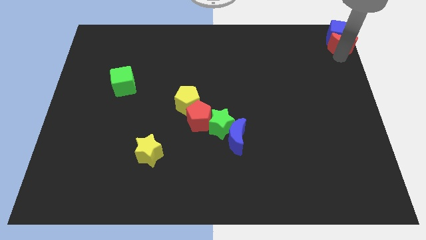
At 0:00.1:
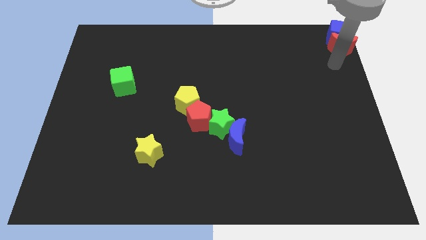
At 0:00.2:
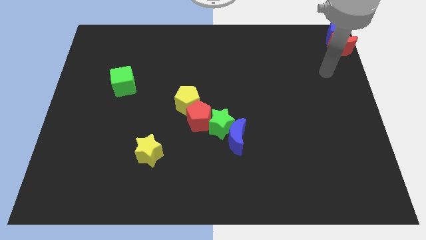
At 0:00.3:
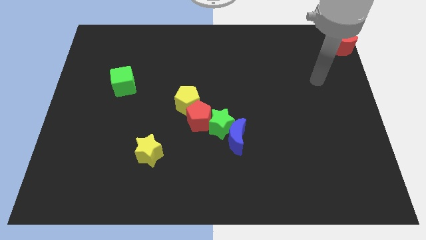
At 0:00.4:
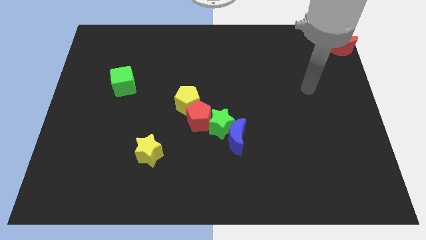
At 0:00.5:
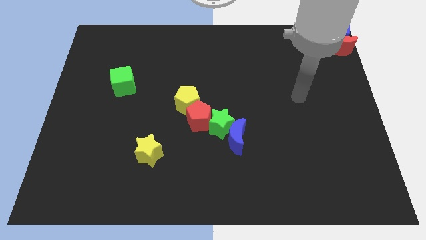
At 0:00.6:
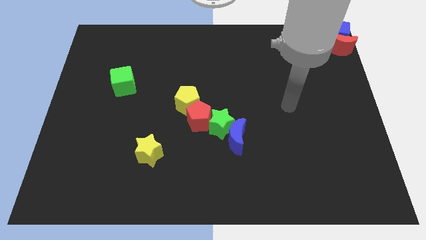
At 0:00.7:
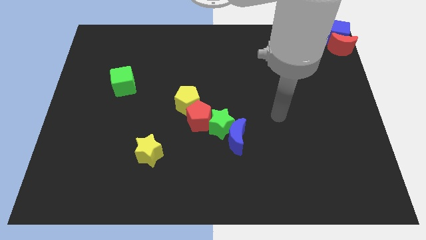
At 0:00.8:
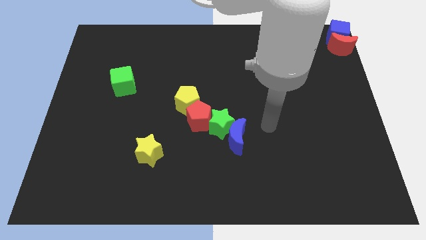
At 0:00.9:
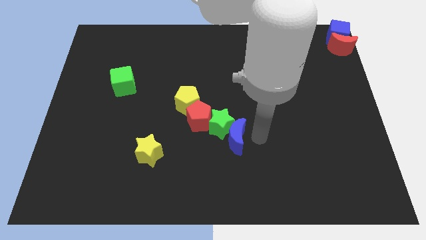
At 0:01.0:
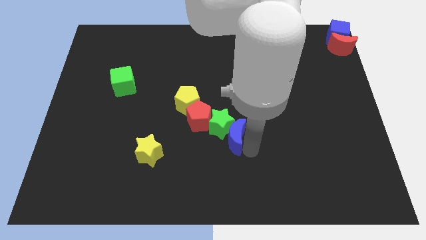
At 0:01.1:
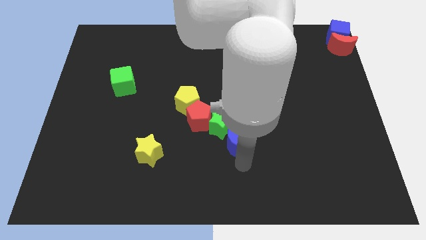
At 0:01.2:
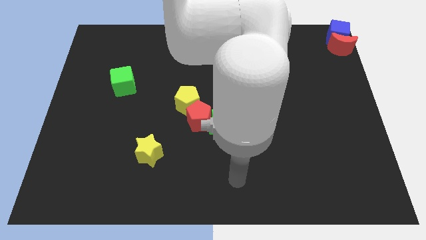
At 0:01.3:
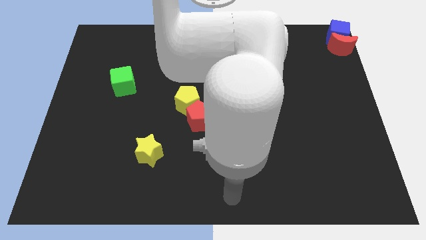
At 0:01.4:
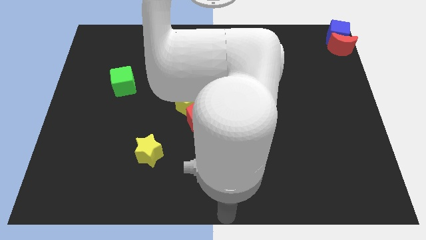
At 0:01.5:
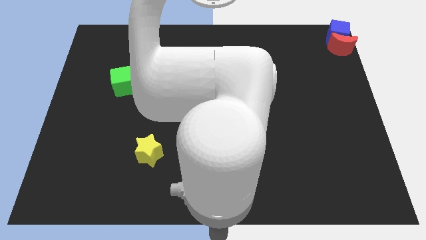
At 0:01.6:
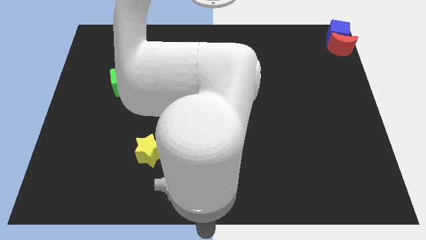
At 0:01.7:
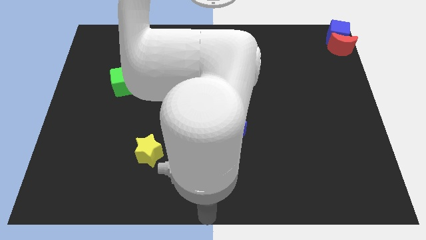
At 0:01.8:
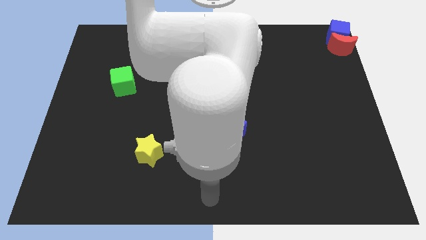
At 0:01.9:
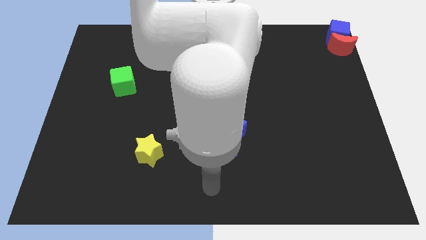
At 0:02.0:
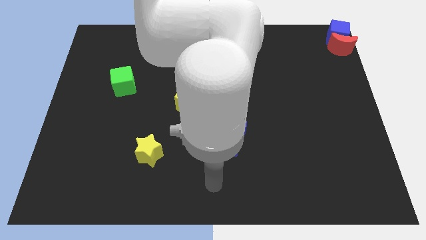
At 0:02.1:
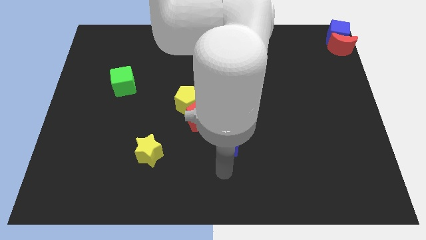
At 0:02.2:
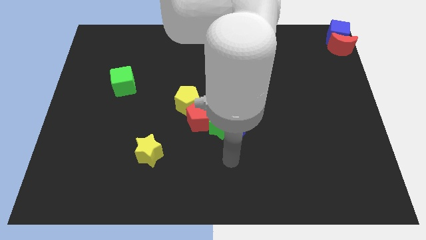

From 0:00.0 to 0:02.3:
move your arm away from the red crescent

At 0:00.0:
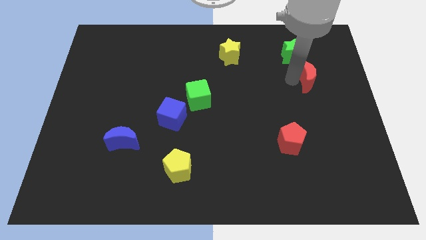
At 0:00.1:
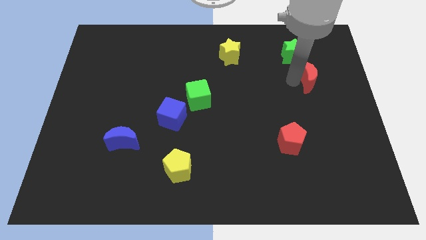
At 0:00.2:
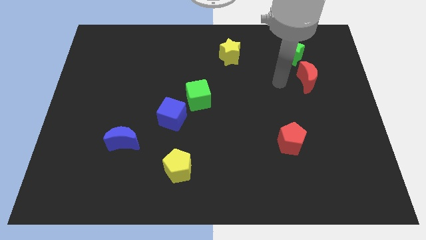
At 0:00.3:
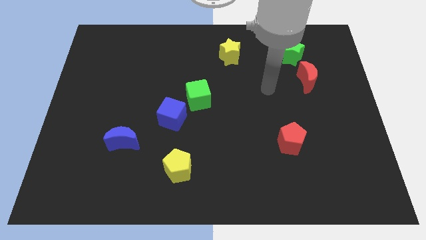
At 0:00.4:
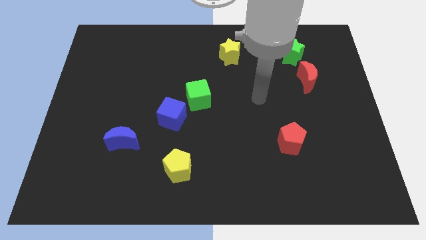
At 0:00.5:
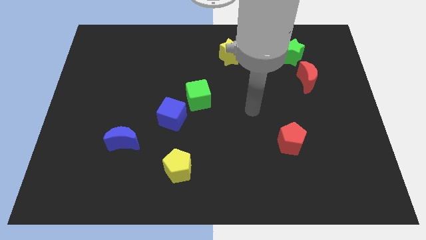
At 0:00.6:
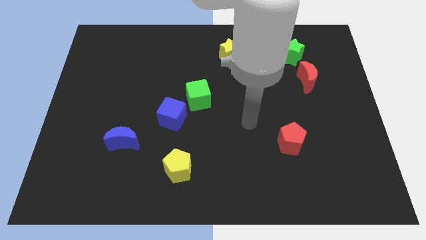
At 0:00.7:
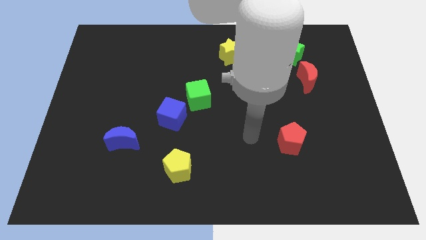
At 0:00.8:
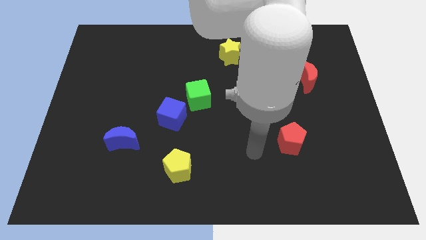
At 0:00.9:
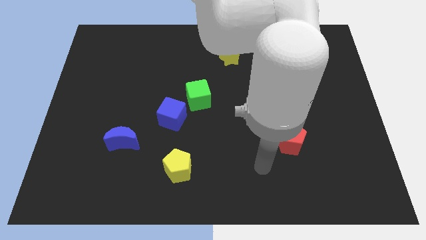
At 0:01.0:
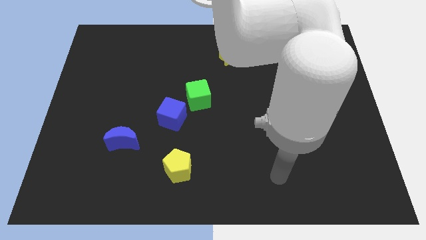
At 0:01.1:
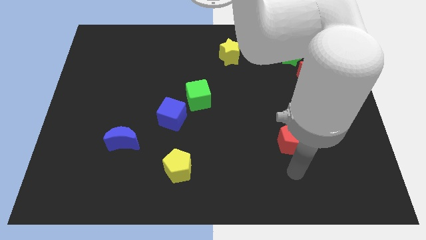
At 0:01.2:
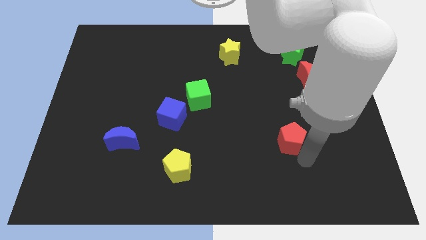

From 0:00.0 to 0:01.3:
move the arm to the left side of the red pentagon

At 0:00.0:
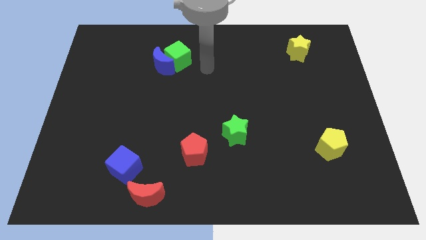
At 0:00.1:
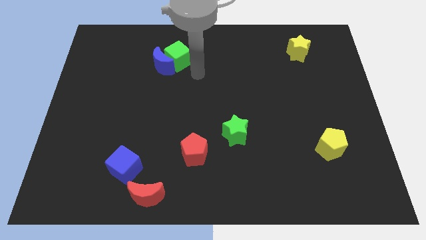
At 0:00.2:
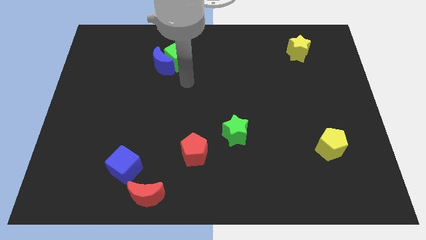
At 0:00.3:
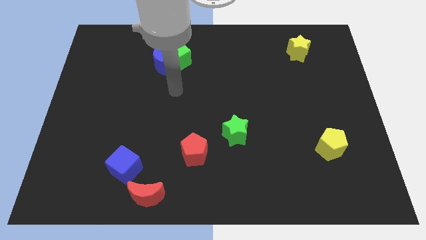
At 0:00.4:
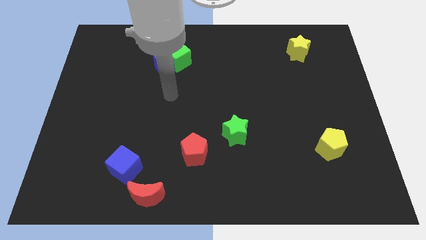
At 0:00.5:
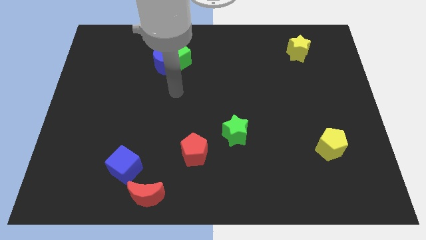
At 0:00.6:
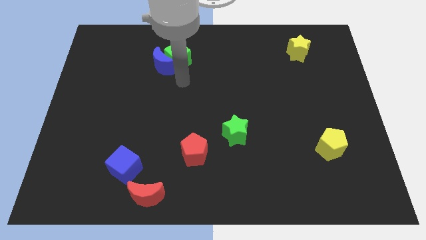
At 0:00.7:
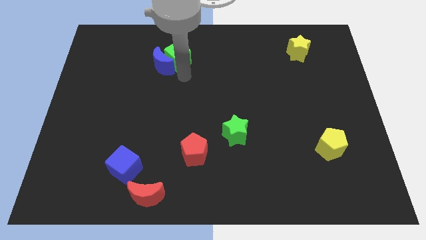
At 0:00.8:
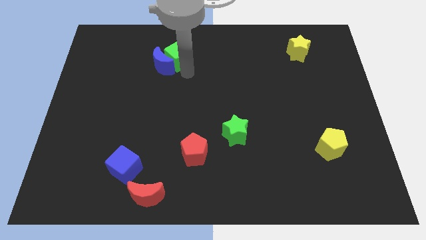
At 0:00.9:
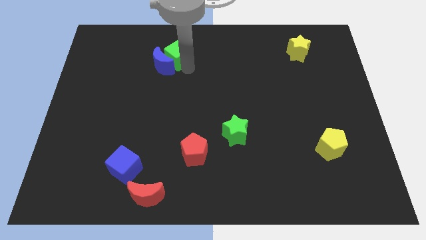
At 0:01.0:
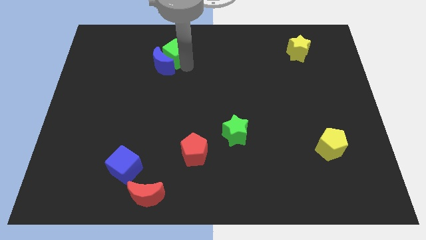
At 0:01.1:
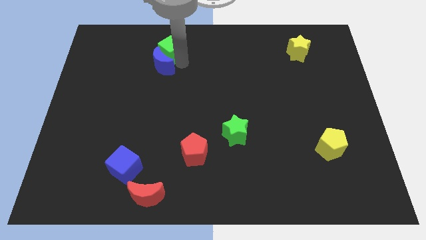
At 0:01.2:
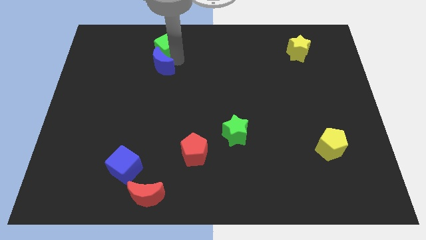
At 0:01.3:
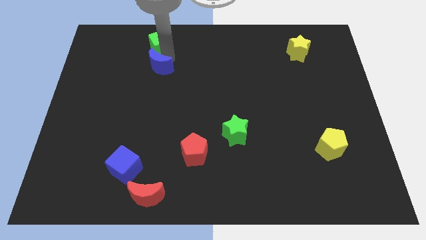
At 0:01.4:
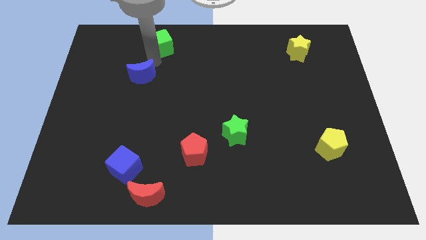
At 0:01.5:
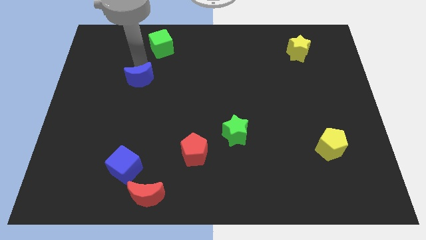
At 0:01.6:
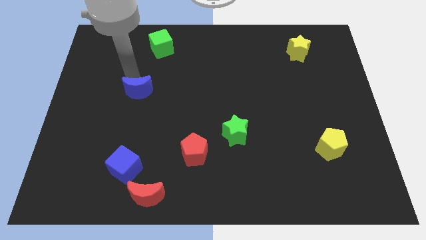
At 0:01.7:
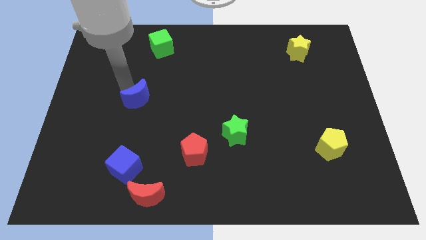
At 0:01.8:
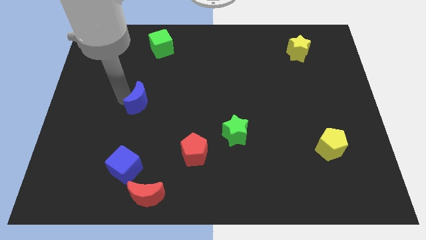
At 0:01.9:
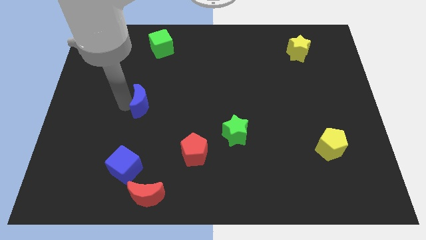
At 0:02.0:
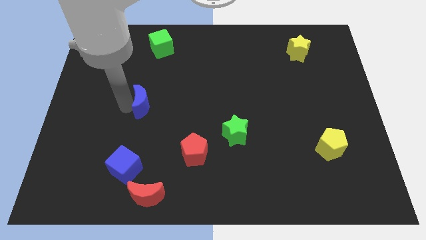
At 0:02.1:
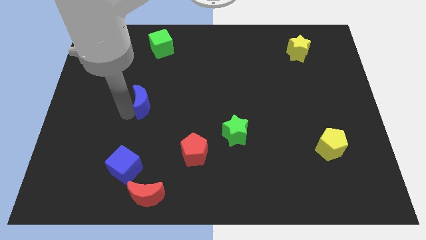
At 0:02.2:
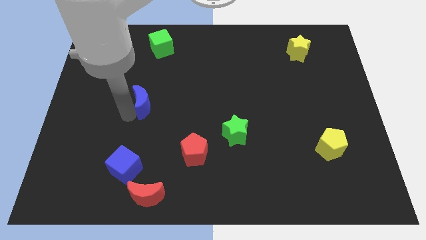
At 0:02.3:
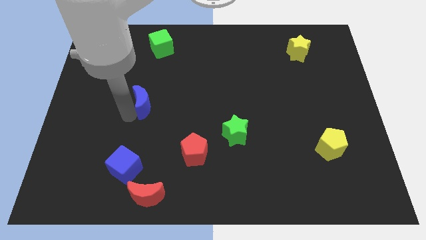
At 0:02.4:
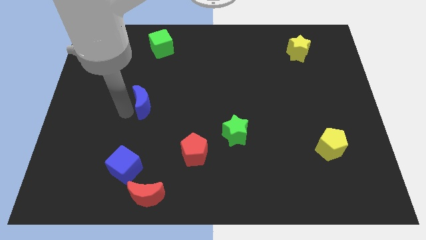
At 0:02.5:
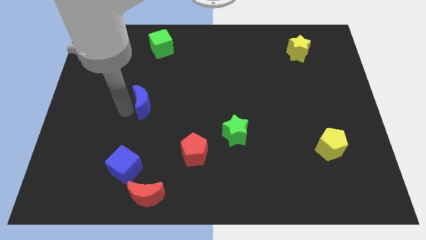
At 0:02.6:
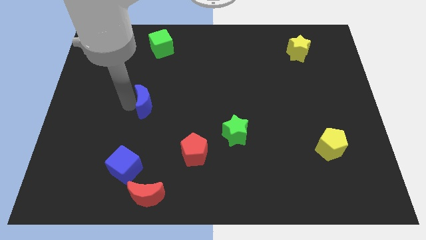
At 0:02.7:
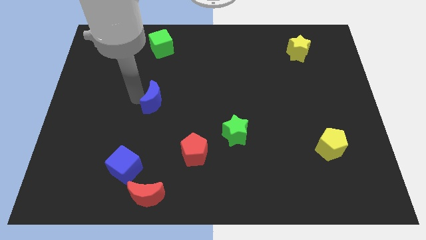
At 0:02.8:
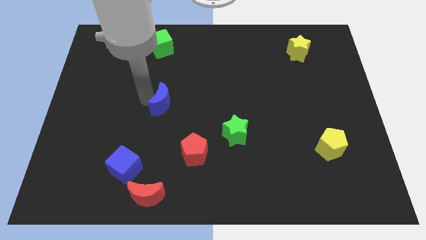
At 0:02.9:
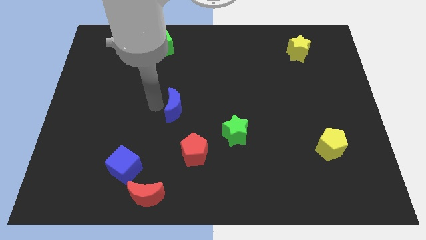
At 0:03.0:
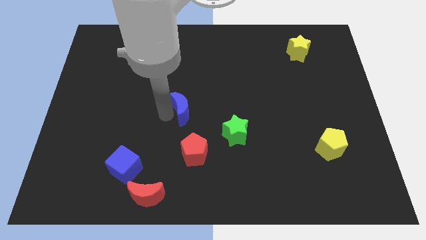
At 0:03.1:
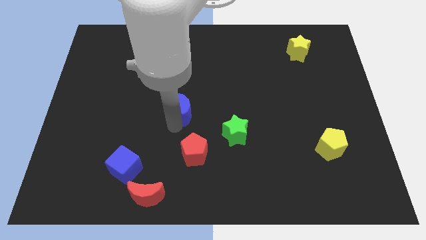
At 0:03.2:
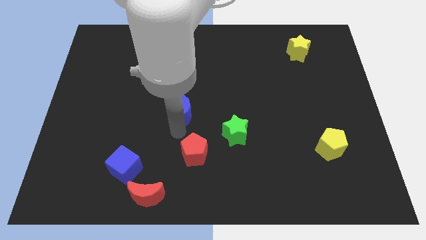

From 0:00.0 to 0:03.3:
separate blue moon and green cube

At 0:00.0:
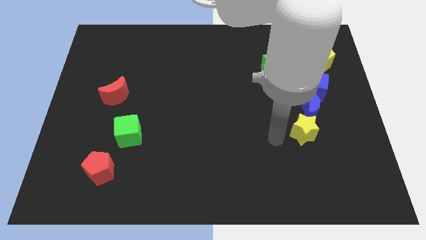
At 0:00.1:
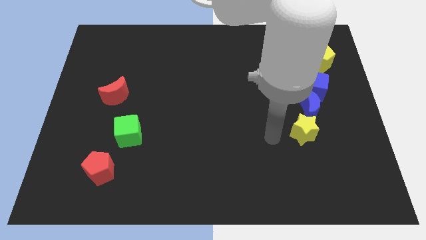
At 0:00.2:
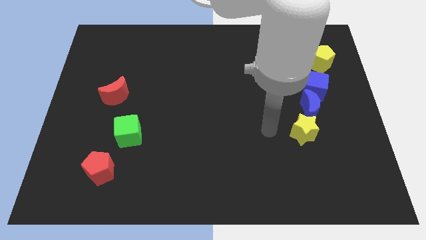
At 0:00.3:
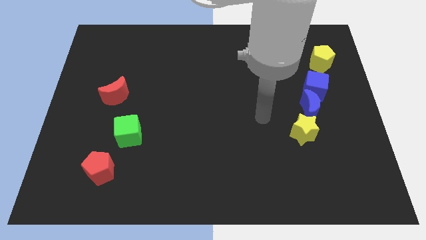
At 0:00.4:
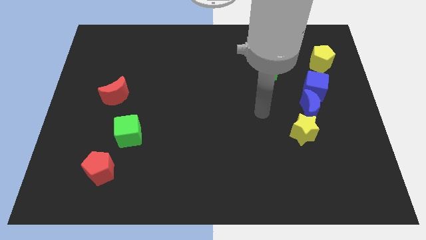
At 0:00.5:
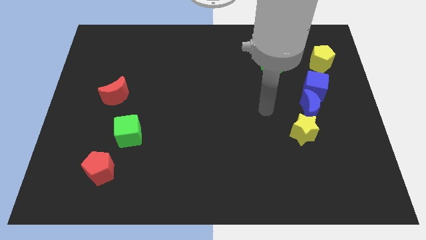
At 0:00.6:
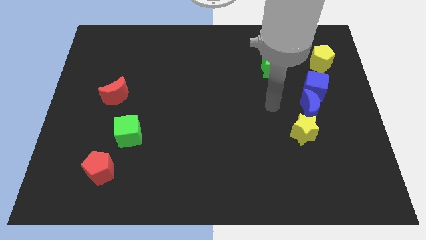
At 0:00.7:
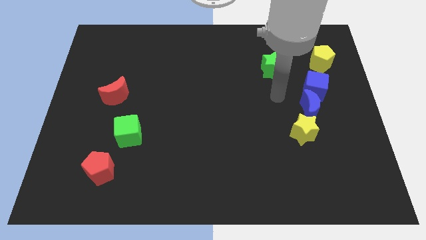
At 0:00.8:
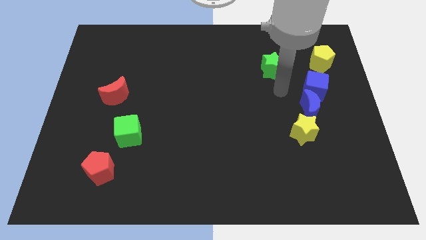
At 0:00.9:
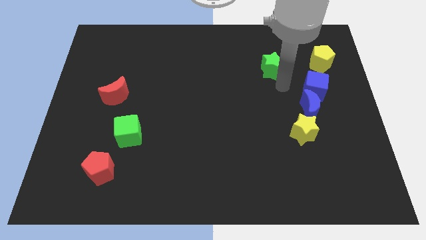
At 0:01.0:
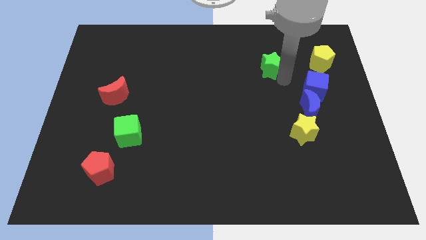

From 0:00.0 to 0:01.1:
touch the bottom of green star

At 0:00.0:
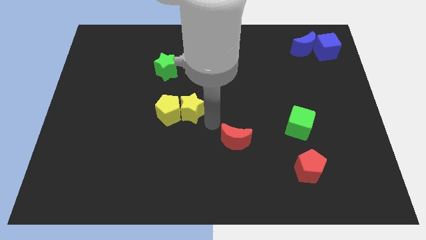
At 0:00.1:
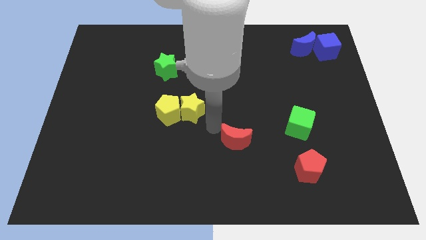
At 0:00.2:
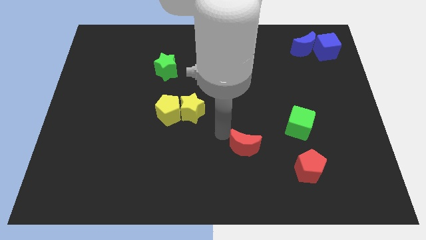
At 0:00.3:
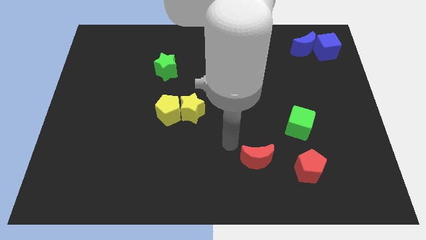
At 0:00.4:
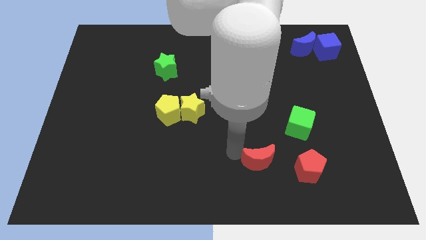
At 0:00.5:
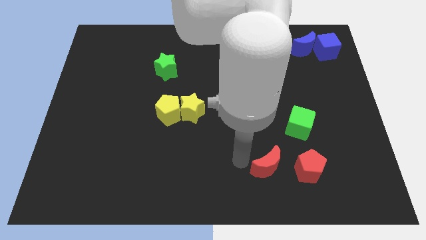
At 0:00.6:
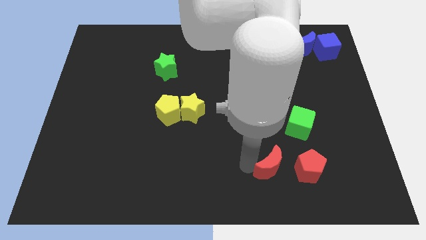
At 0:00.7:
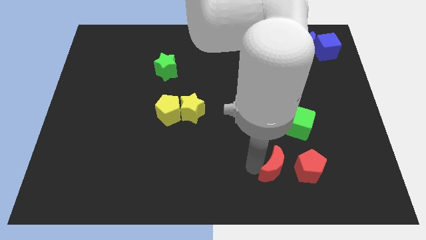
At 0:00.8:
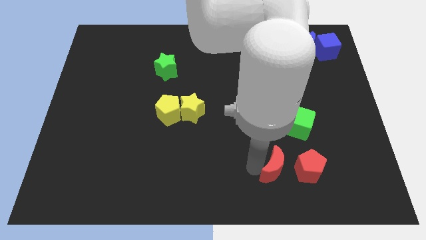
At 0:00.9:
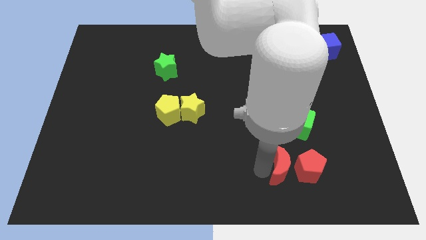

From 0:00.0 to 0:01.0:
move red moon to the left of red pentagon
